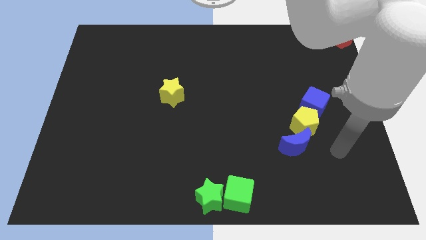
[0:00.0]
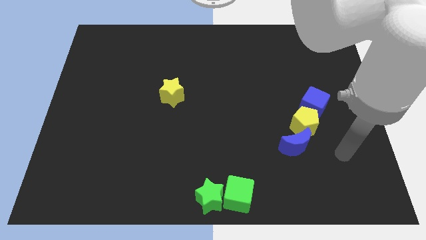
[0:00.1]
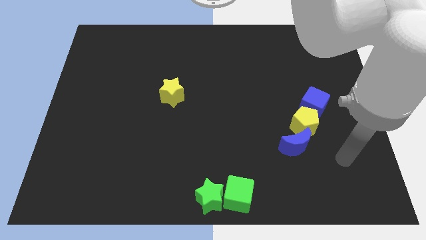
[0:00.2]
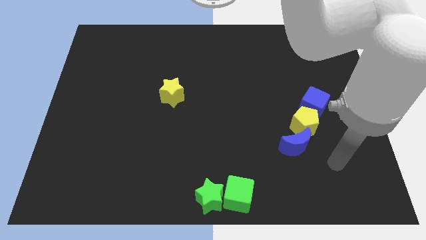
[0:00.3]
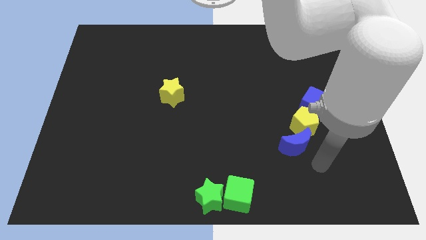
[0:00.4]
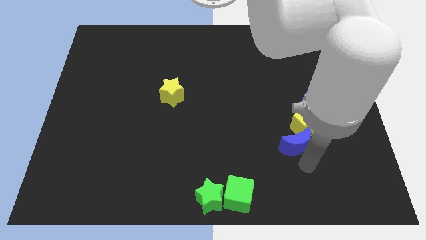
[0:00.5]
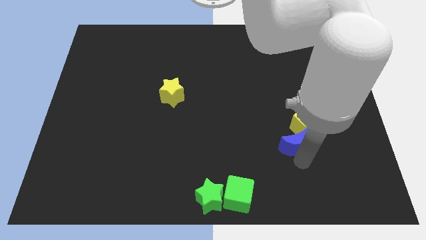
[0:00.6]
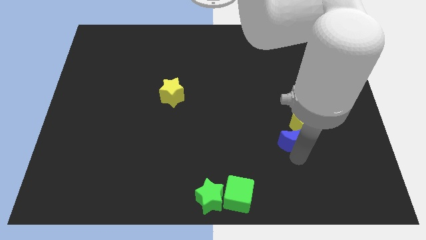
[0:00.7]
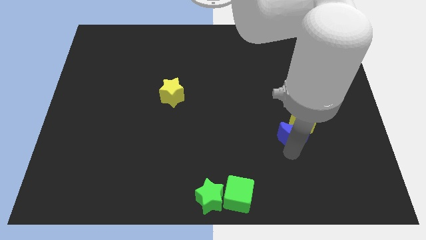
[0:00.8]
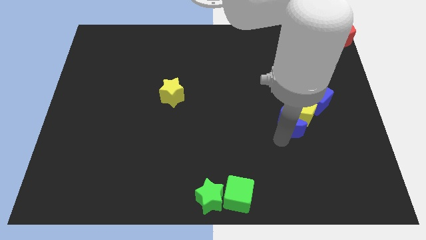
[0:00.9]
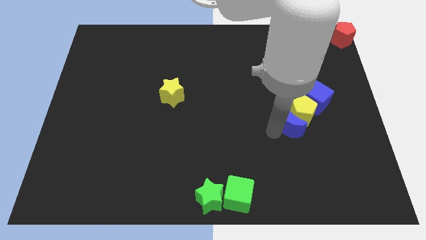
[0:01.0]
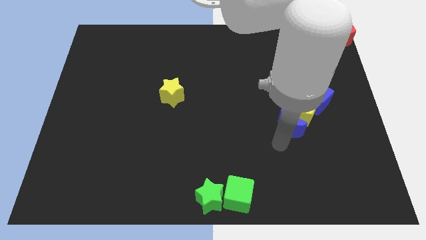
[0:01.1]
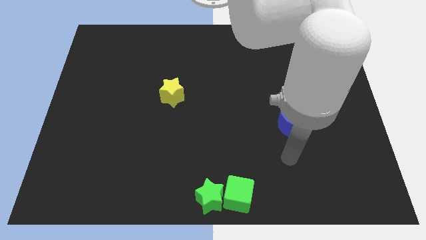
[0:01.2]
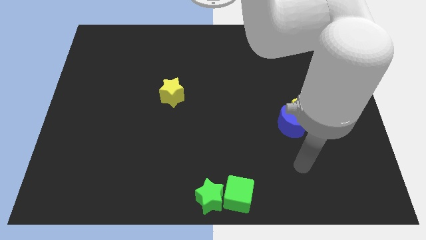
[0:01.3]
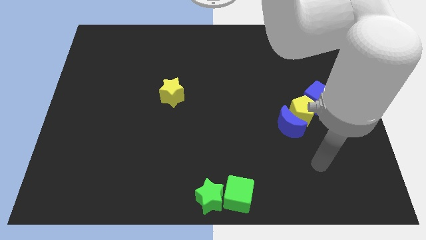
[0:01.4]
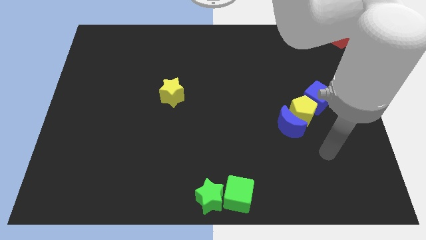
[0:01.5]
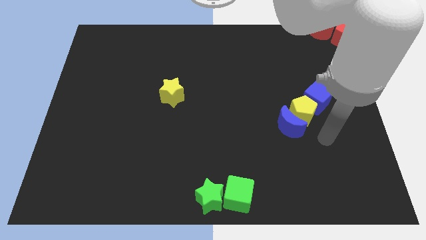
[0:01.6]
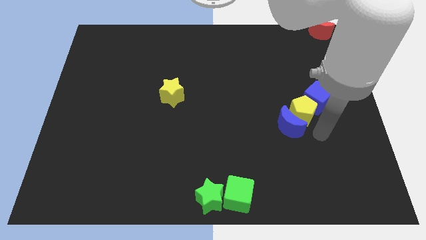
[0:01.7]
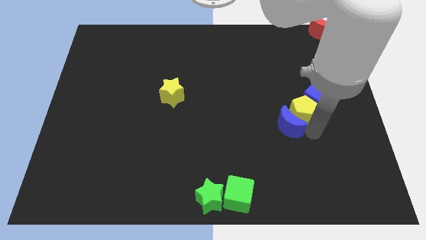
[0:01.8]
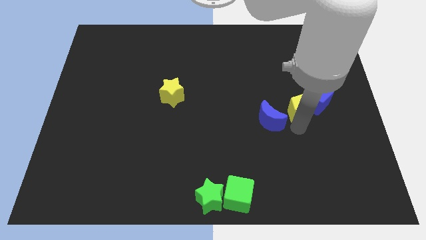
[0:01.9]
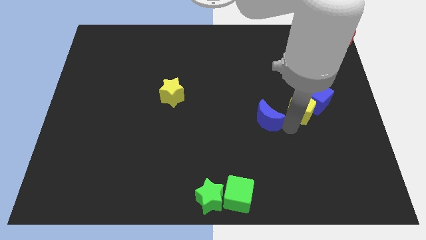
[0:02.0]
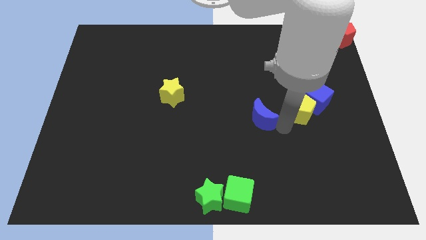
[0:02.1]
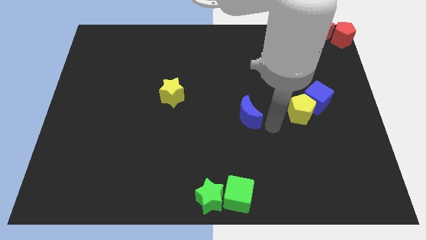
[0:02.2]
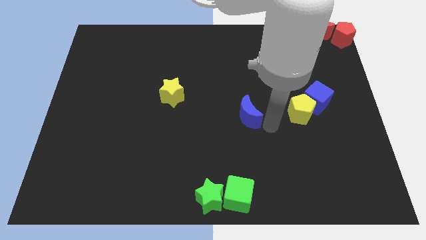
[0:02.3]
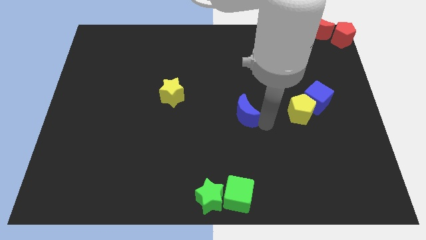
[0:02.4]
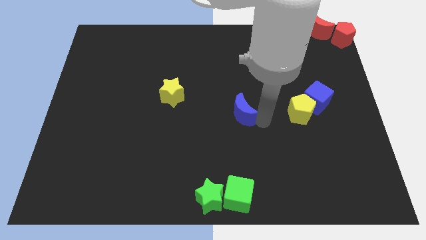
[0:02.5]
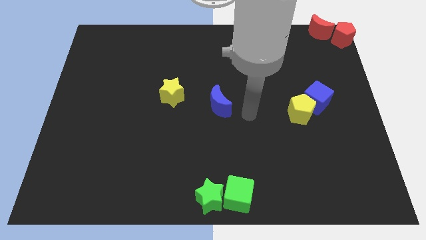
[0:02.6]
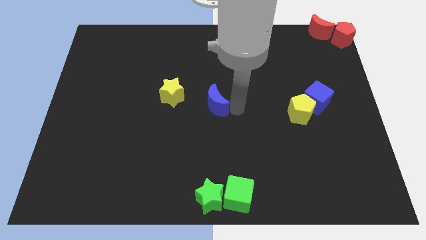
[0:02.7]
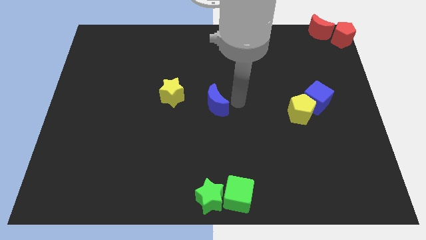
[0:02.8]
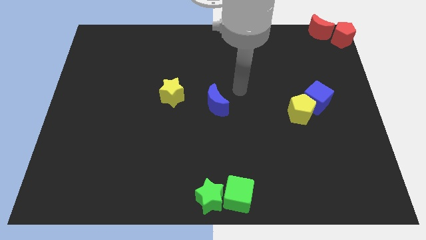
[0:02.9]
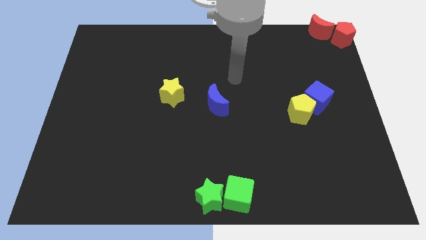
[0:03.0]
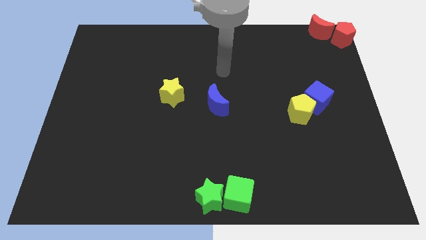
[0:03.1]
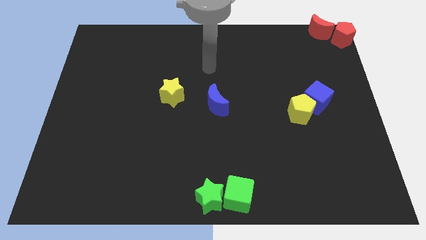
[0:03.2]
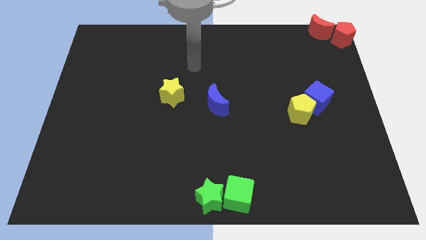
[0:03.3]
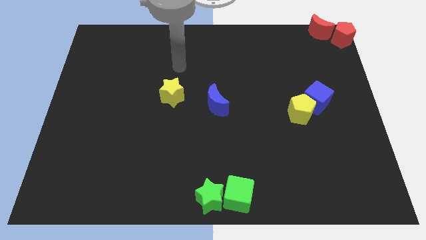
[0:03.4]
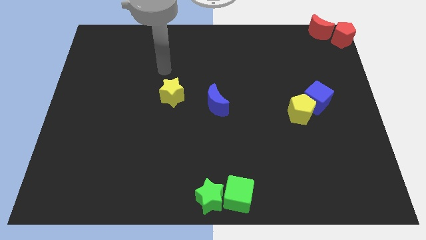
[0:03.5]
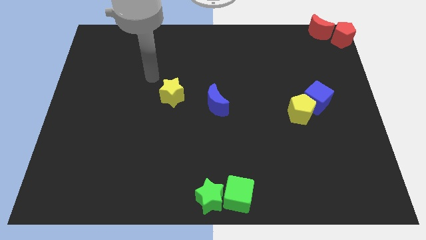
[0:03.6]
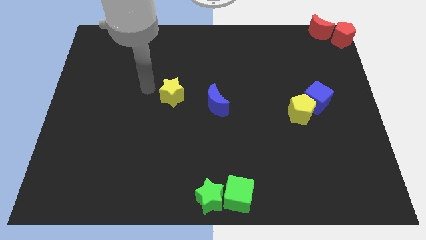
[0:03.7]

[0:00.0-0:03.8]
push the blue crescent to the center of the board

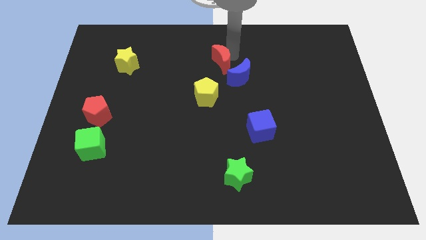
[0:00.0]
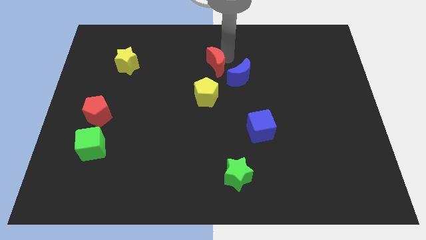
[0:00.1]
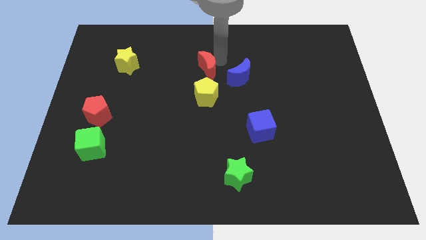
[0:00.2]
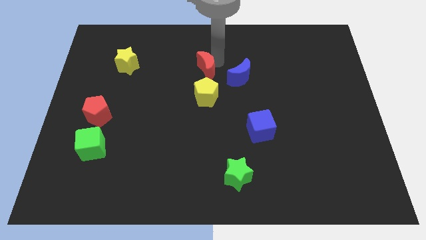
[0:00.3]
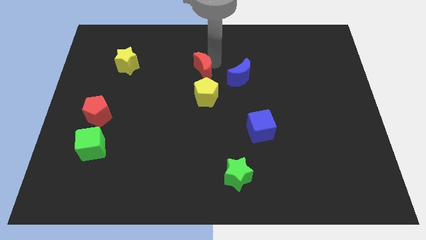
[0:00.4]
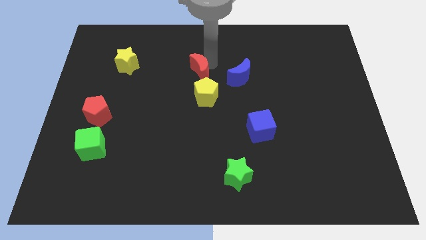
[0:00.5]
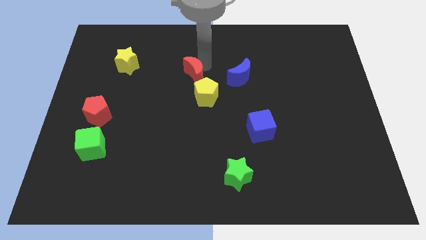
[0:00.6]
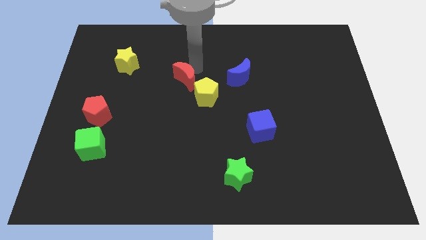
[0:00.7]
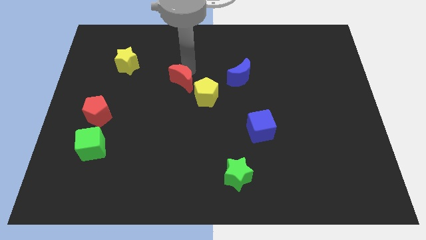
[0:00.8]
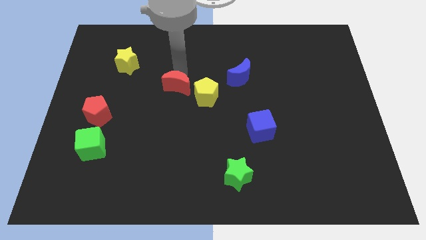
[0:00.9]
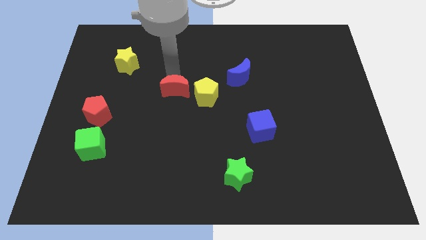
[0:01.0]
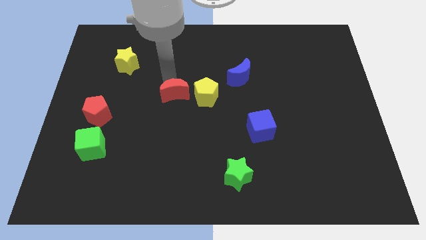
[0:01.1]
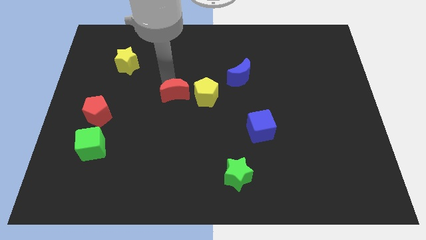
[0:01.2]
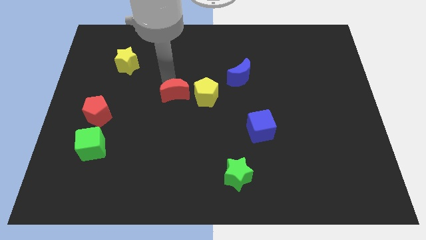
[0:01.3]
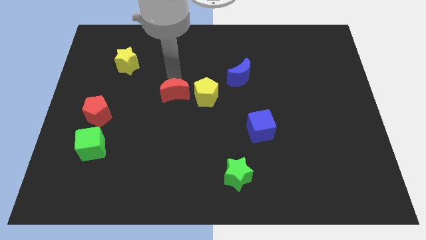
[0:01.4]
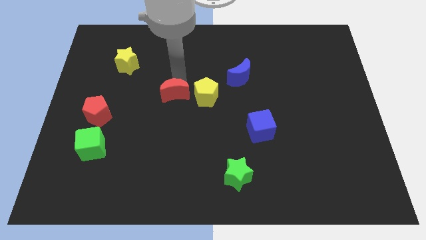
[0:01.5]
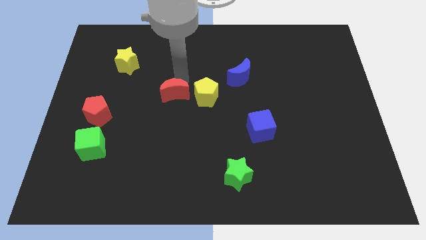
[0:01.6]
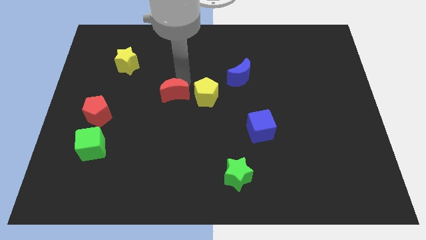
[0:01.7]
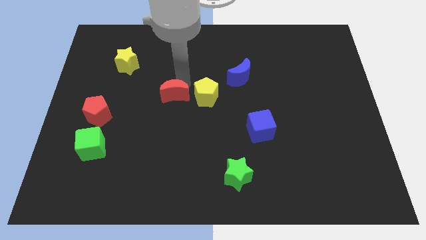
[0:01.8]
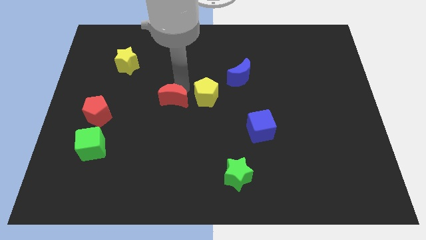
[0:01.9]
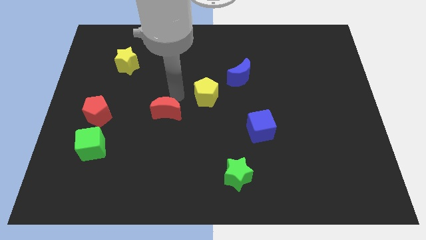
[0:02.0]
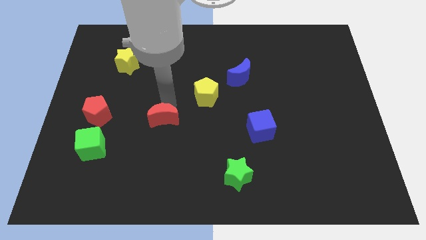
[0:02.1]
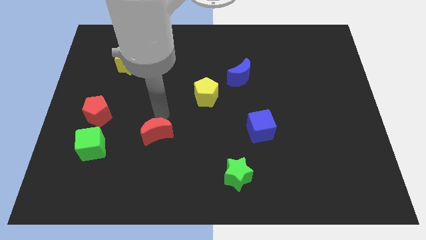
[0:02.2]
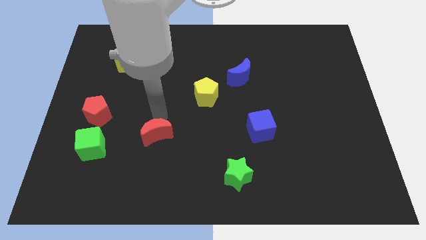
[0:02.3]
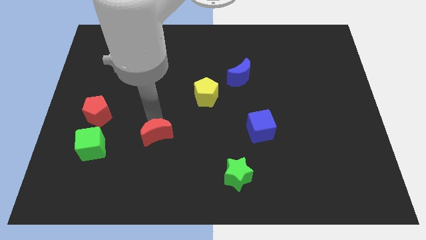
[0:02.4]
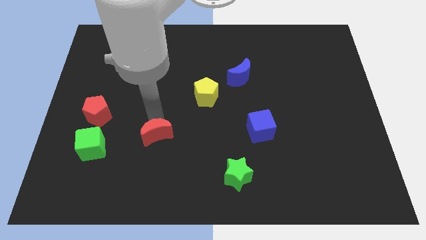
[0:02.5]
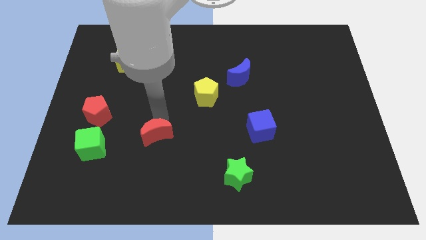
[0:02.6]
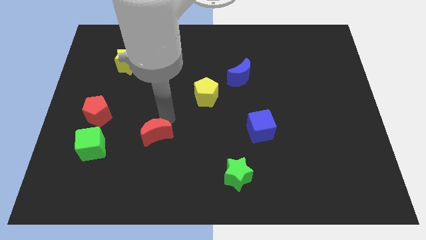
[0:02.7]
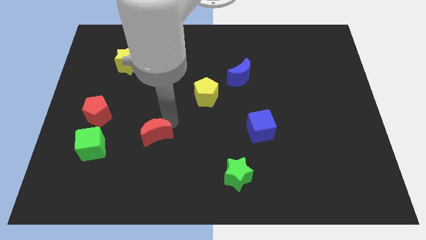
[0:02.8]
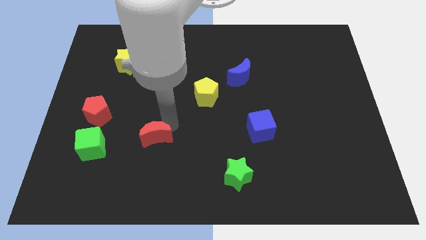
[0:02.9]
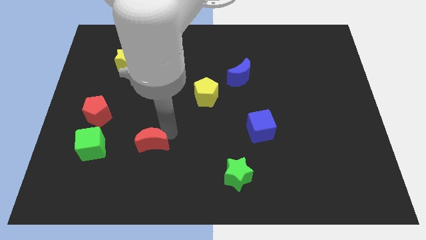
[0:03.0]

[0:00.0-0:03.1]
push red crescent to the right of the green cube

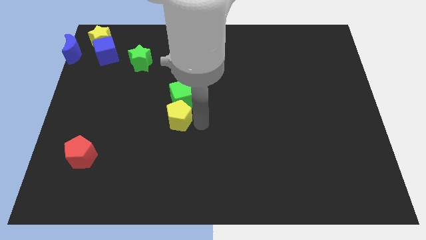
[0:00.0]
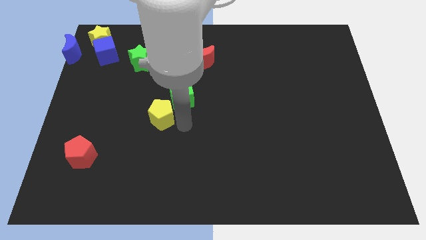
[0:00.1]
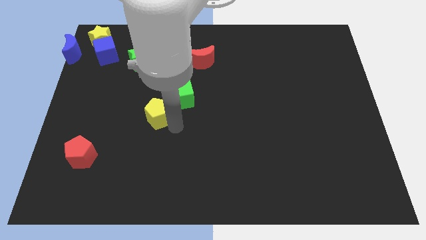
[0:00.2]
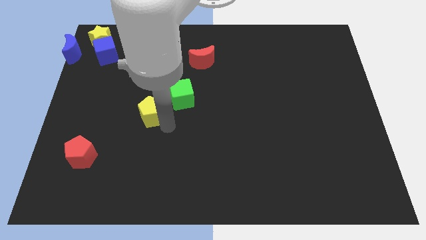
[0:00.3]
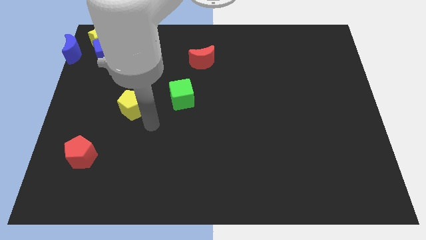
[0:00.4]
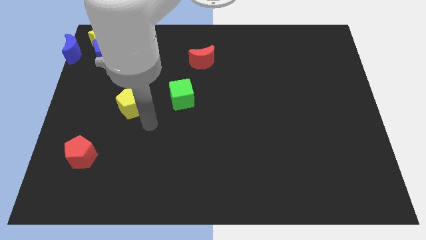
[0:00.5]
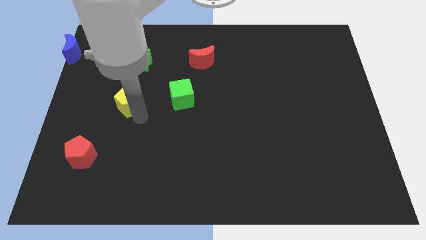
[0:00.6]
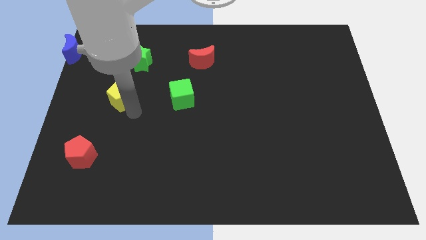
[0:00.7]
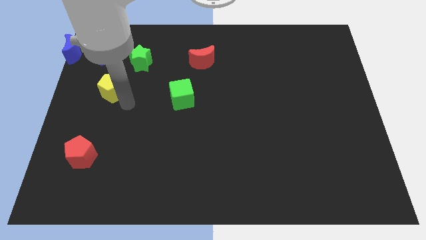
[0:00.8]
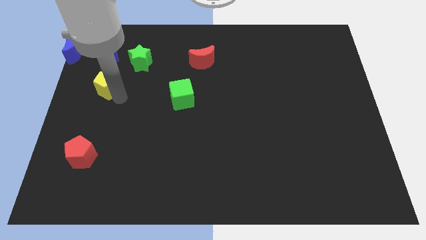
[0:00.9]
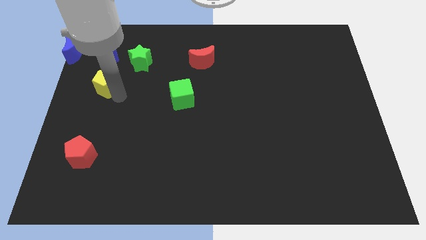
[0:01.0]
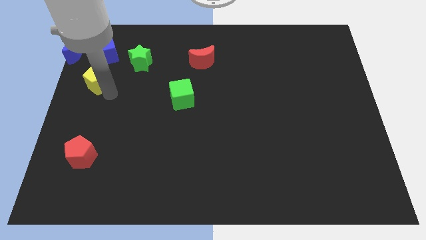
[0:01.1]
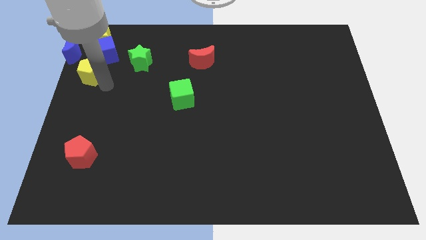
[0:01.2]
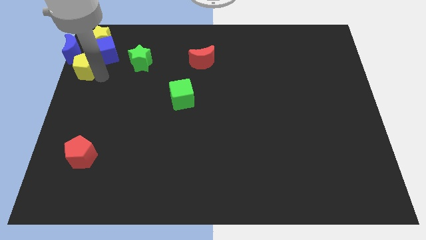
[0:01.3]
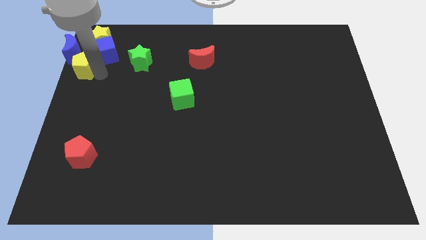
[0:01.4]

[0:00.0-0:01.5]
separate yellow pentagon from the green cube

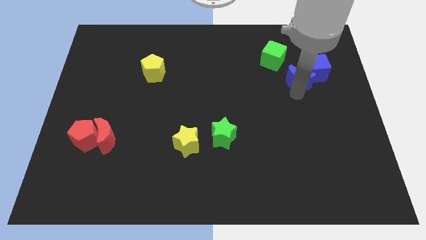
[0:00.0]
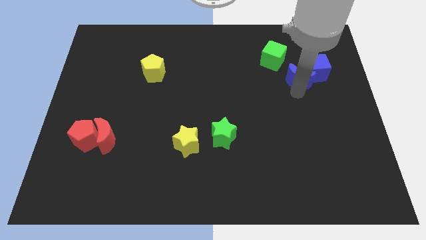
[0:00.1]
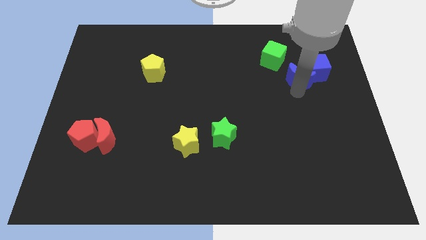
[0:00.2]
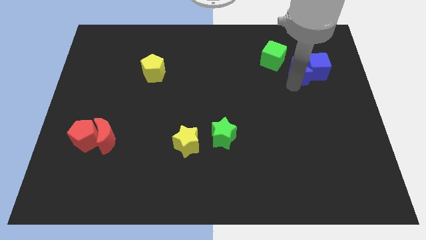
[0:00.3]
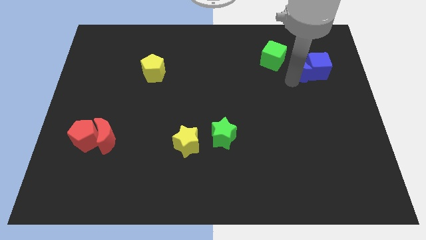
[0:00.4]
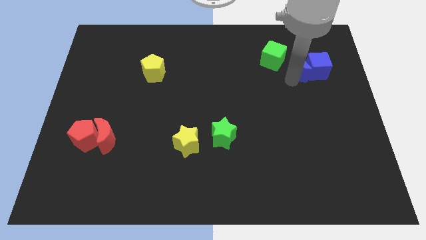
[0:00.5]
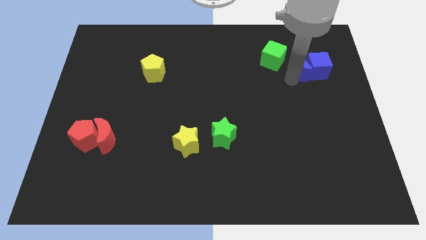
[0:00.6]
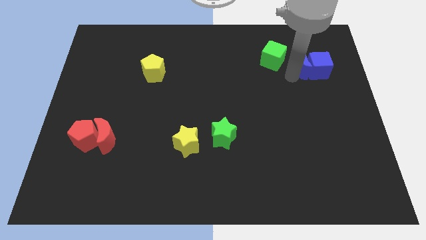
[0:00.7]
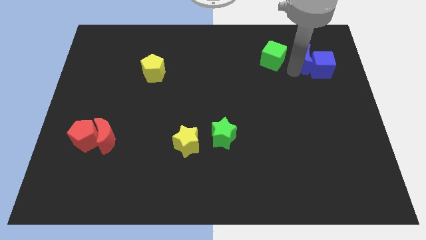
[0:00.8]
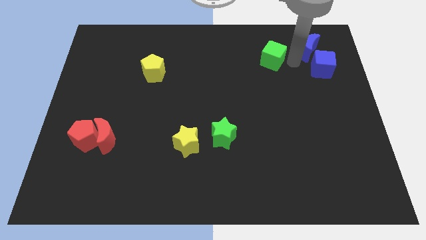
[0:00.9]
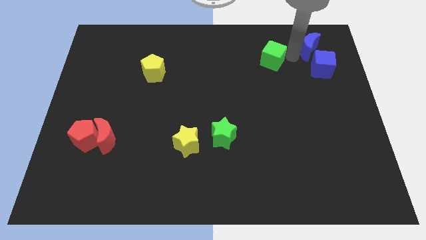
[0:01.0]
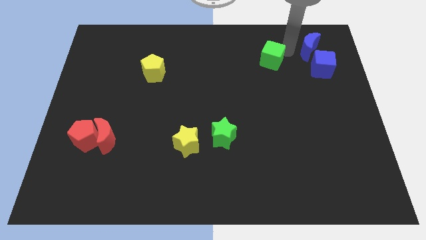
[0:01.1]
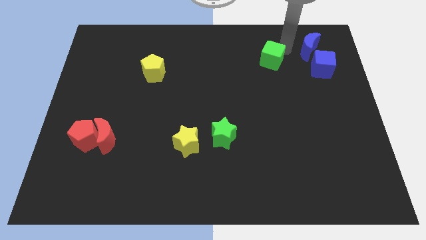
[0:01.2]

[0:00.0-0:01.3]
place the blue crescent top of blue cube
